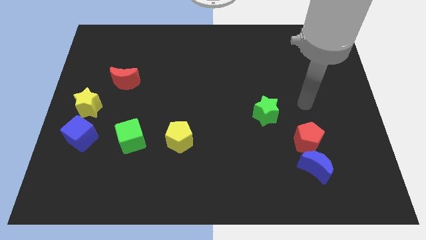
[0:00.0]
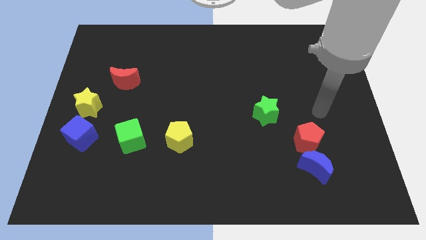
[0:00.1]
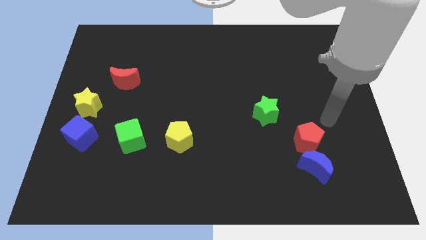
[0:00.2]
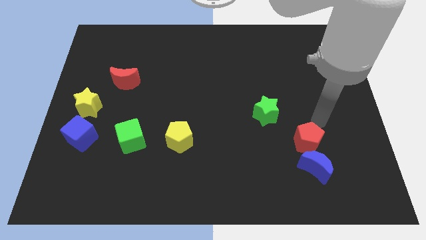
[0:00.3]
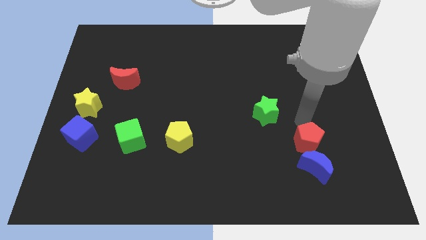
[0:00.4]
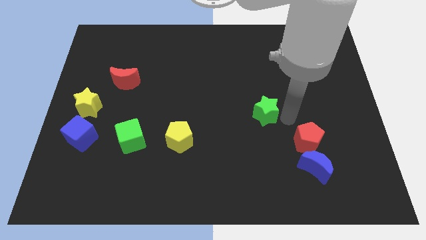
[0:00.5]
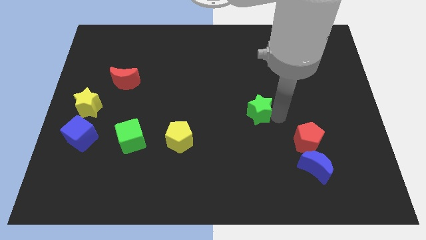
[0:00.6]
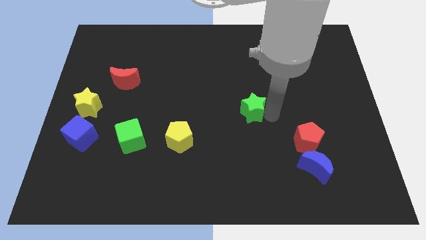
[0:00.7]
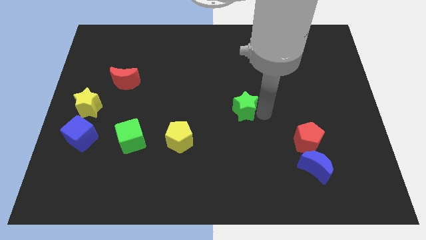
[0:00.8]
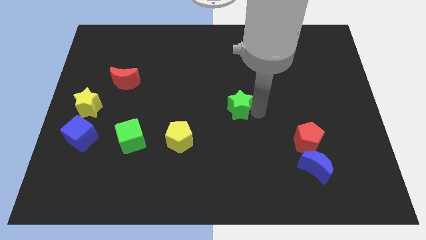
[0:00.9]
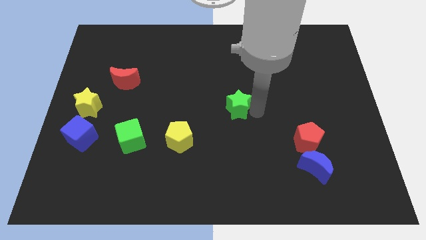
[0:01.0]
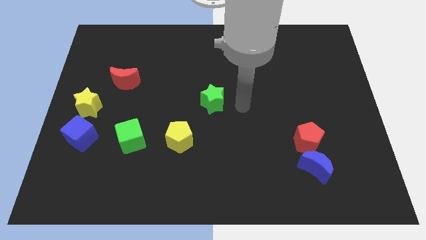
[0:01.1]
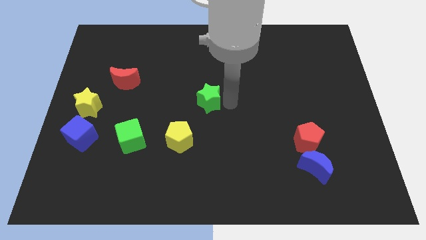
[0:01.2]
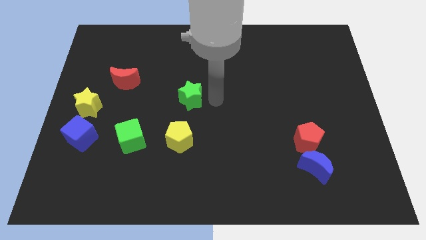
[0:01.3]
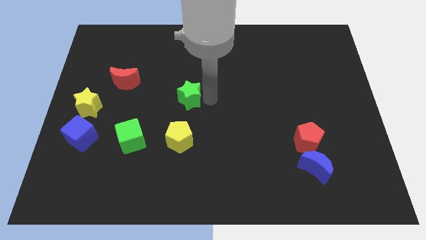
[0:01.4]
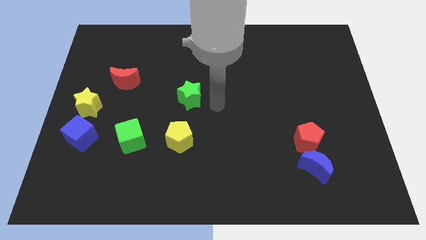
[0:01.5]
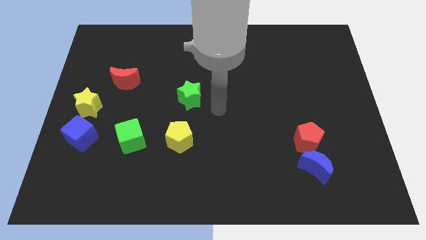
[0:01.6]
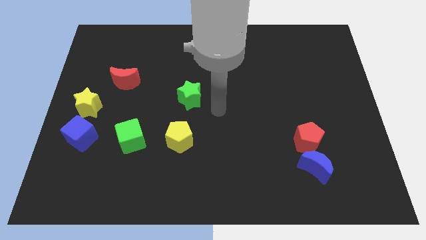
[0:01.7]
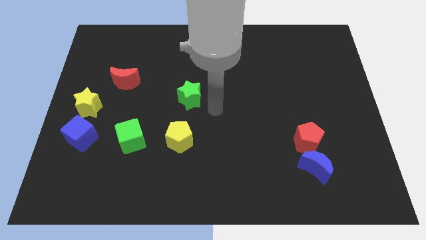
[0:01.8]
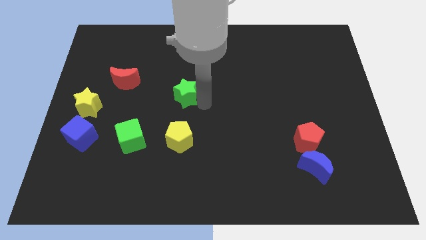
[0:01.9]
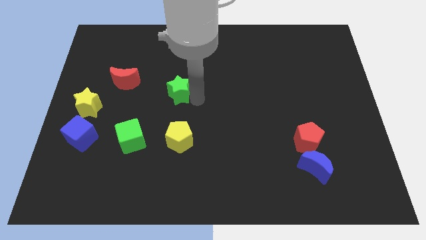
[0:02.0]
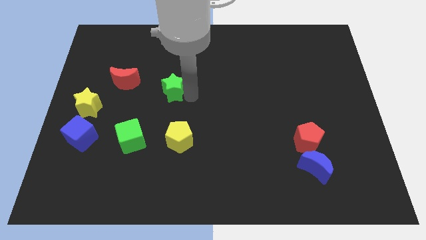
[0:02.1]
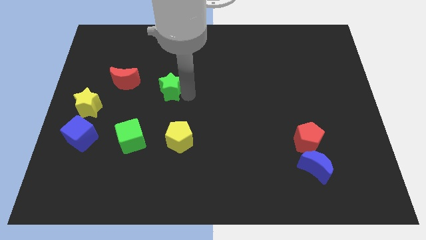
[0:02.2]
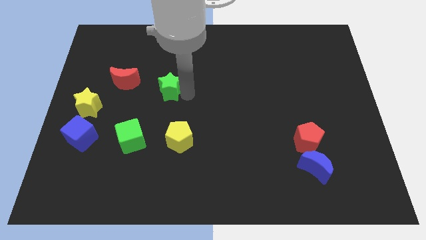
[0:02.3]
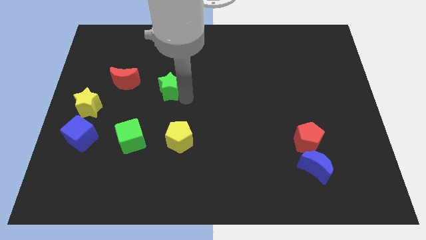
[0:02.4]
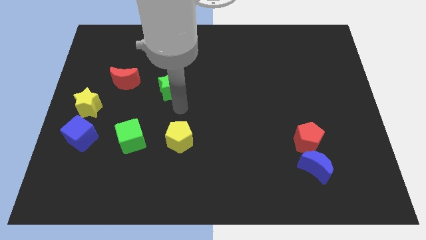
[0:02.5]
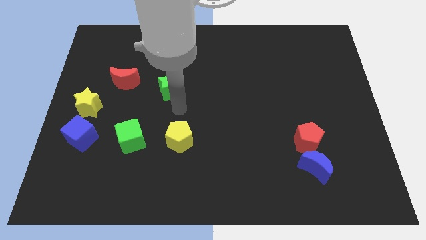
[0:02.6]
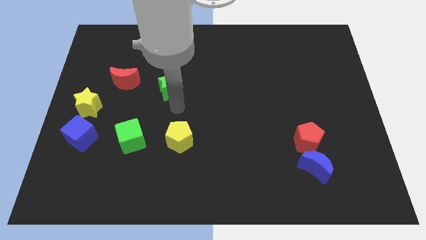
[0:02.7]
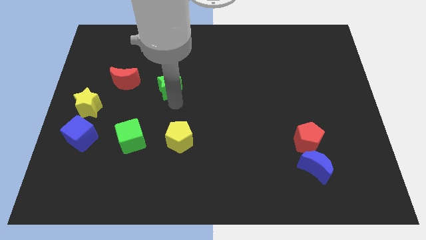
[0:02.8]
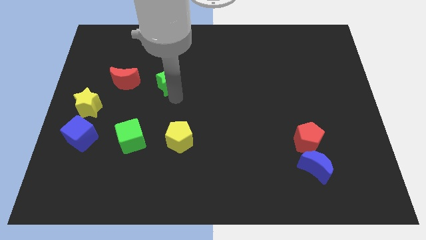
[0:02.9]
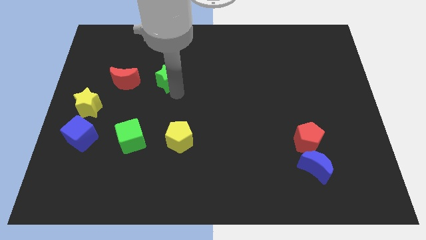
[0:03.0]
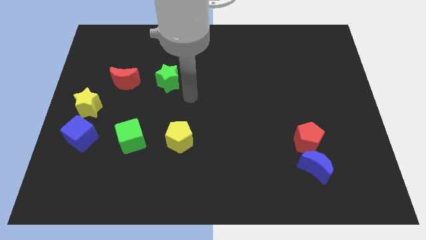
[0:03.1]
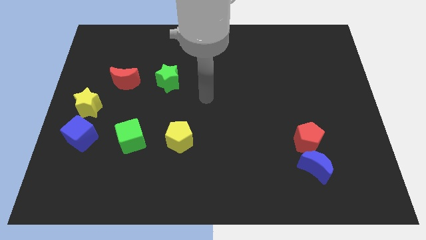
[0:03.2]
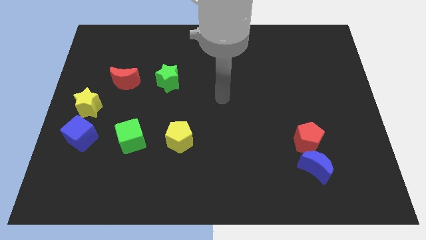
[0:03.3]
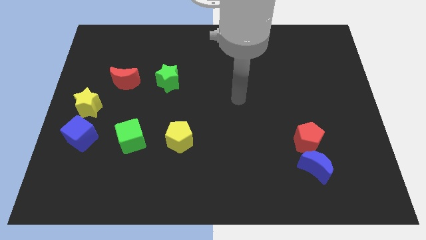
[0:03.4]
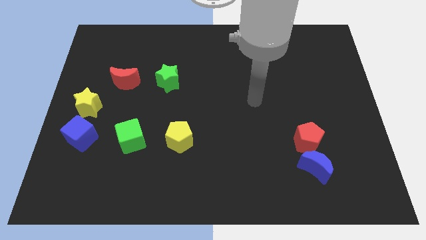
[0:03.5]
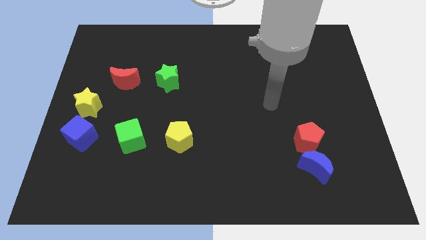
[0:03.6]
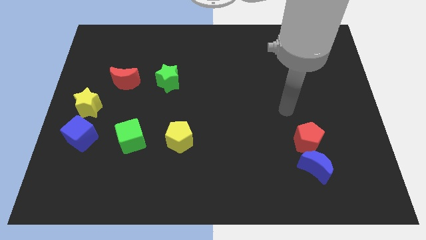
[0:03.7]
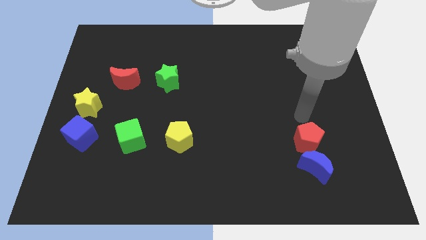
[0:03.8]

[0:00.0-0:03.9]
slide the green star to the right of the red moon

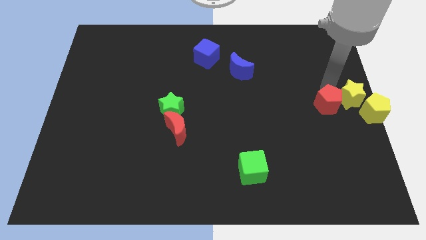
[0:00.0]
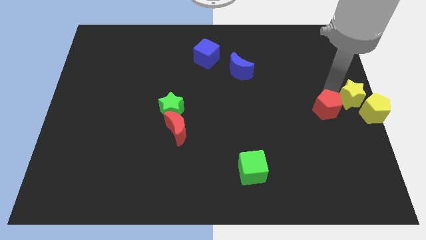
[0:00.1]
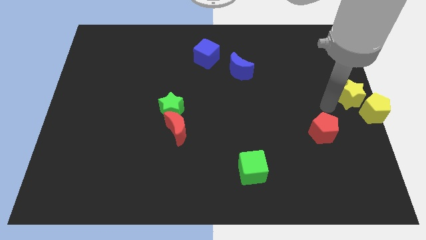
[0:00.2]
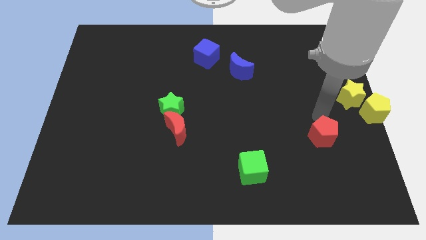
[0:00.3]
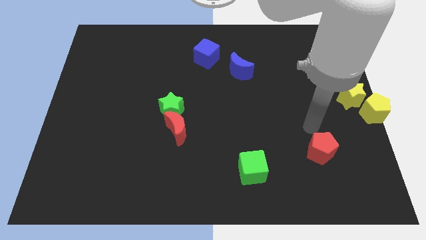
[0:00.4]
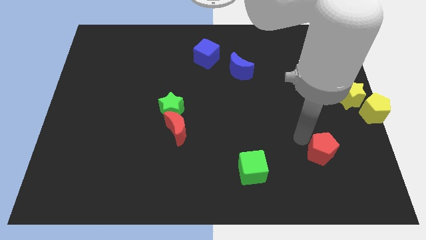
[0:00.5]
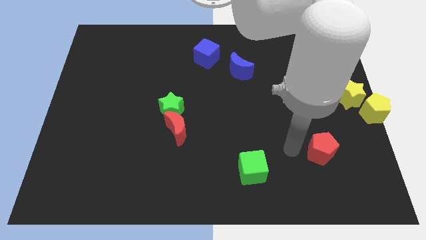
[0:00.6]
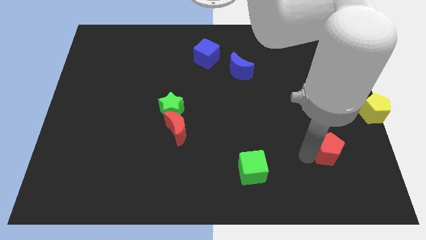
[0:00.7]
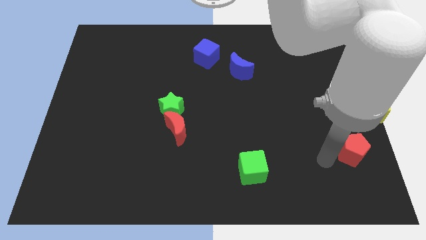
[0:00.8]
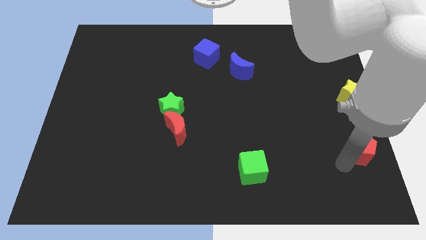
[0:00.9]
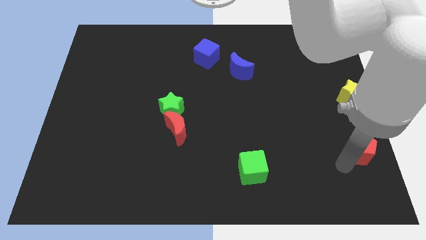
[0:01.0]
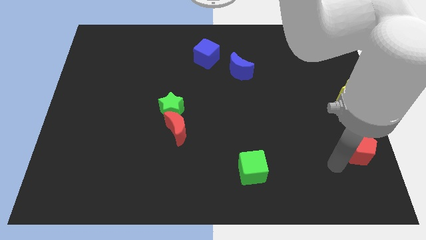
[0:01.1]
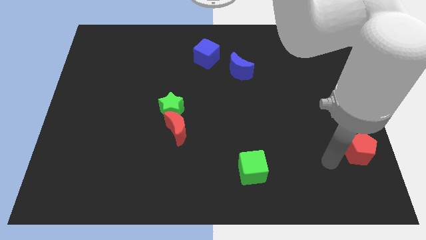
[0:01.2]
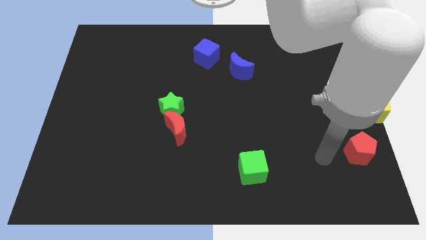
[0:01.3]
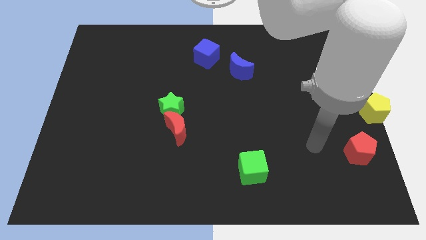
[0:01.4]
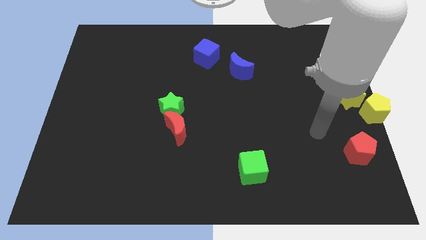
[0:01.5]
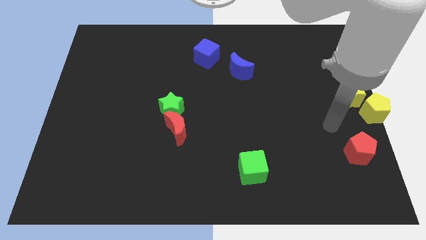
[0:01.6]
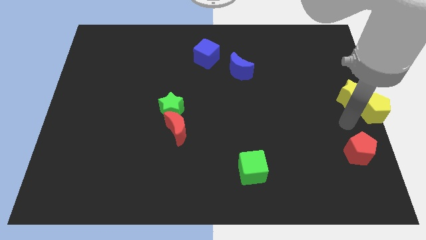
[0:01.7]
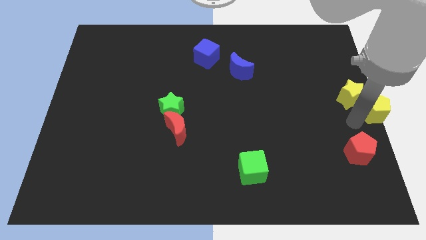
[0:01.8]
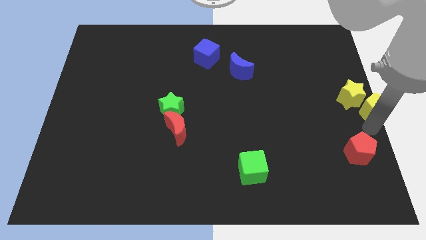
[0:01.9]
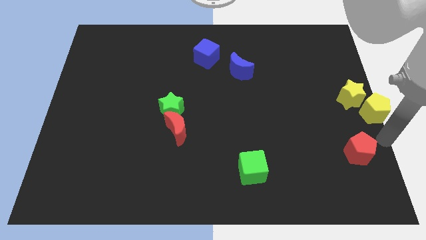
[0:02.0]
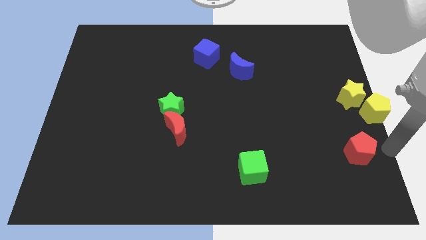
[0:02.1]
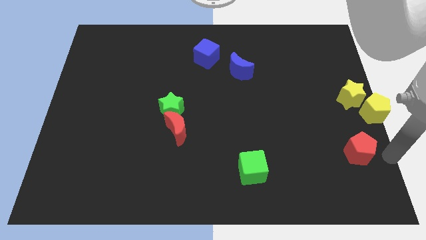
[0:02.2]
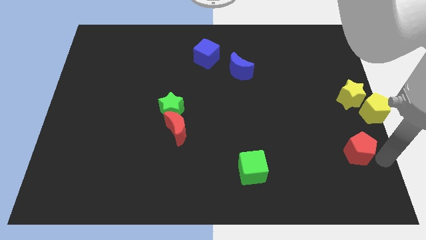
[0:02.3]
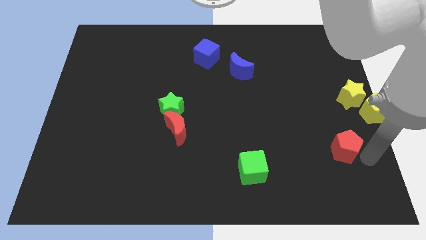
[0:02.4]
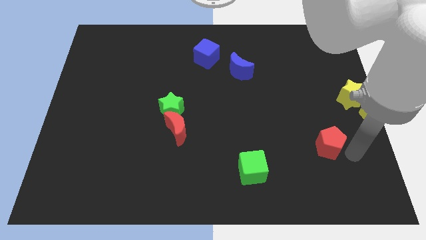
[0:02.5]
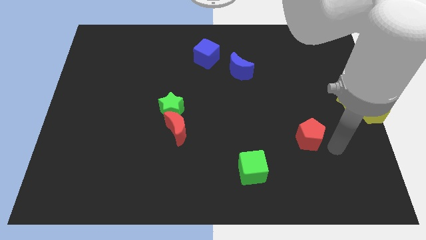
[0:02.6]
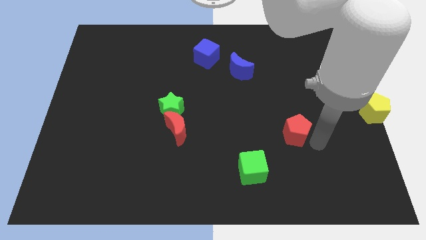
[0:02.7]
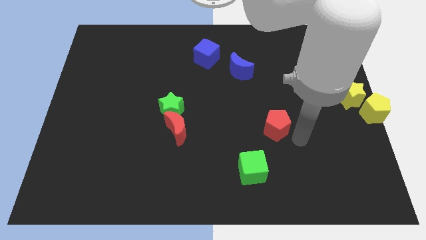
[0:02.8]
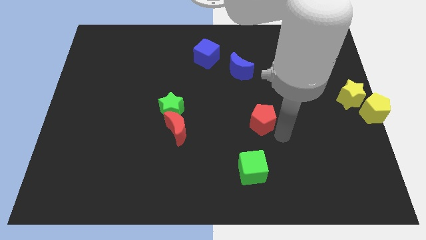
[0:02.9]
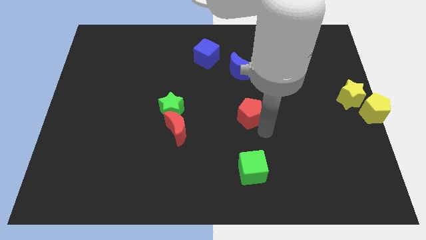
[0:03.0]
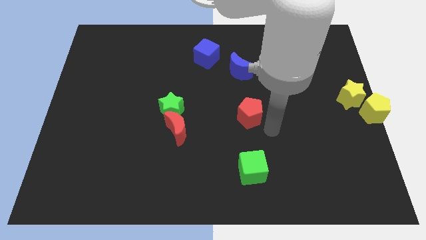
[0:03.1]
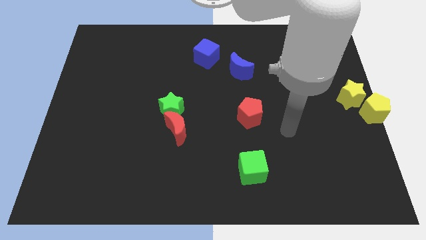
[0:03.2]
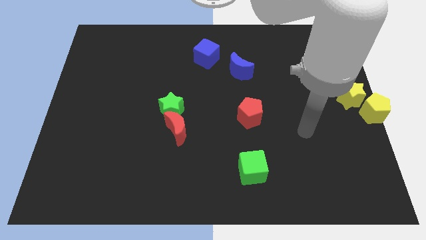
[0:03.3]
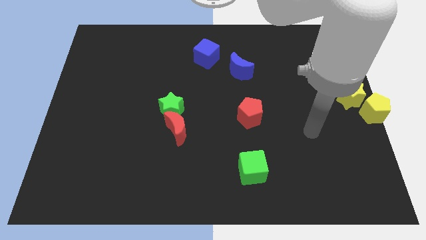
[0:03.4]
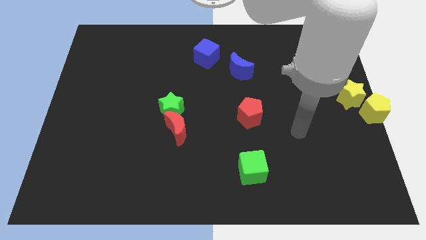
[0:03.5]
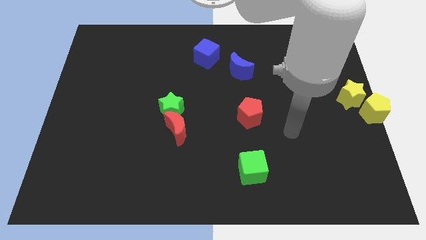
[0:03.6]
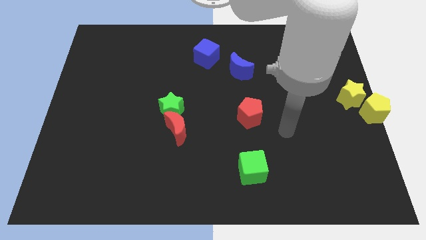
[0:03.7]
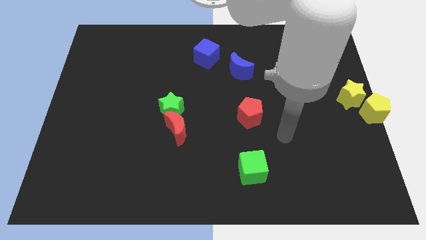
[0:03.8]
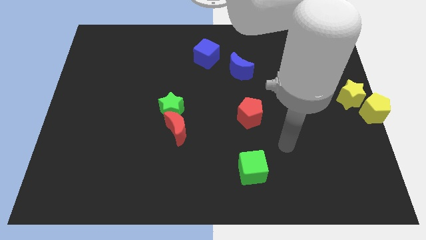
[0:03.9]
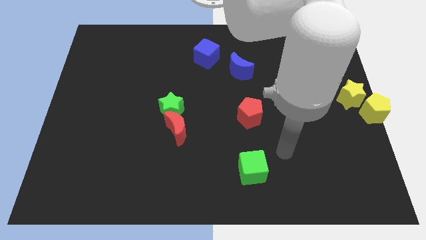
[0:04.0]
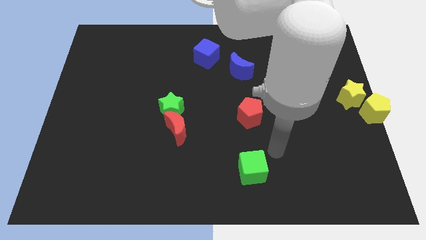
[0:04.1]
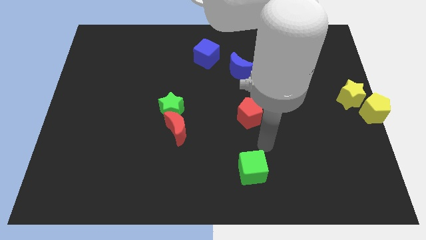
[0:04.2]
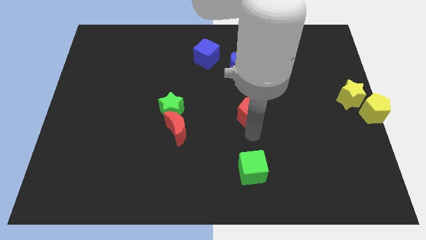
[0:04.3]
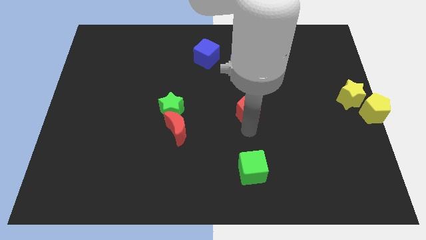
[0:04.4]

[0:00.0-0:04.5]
move red pentagon to the center of the board

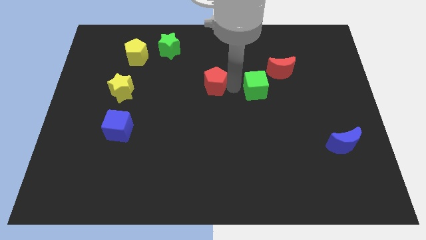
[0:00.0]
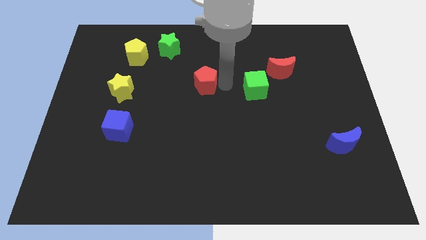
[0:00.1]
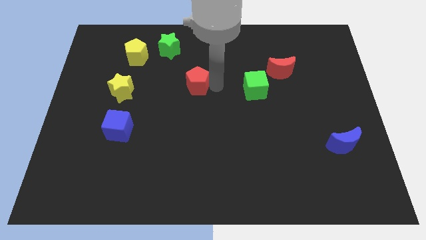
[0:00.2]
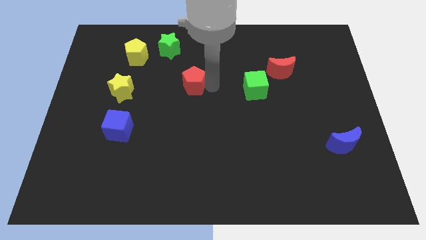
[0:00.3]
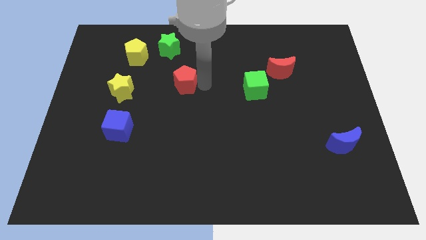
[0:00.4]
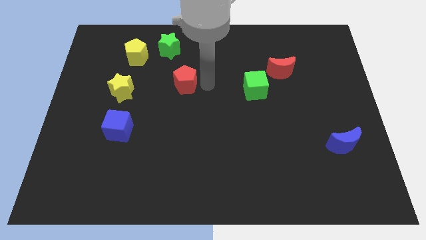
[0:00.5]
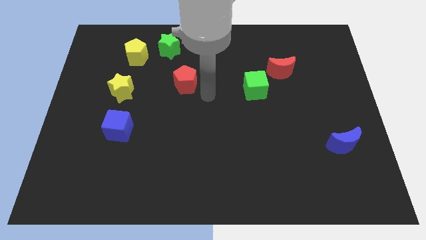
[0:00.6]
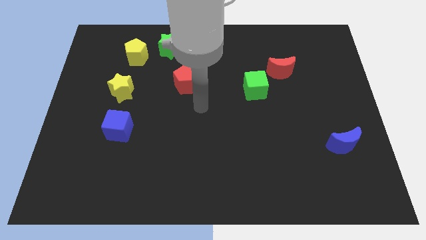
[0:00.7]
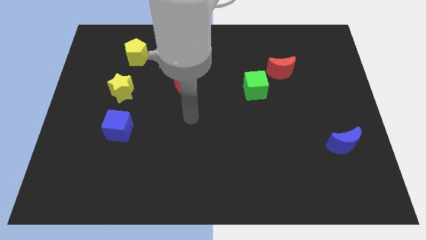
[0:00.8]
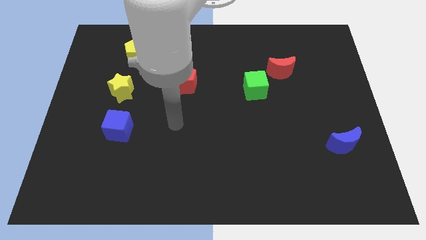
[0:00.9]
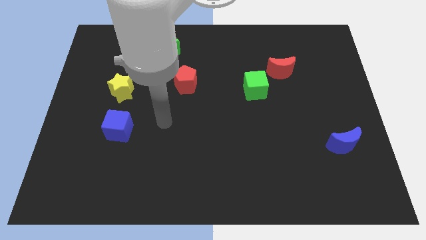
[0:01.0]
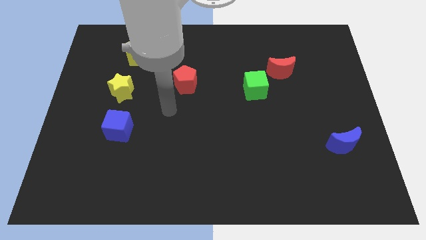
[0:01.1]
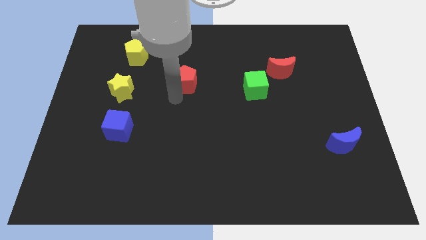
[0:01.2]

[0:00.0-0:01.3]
push the red pentagon to the left side of the green cube
